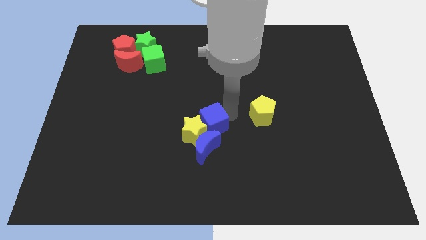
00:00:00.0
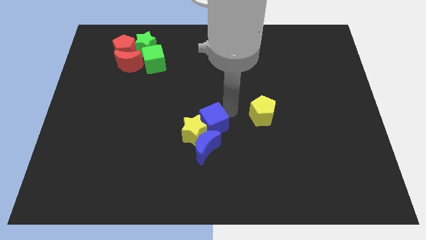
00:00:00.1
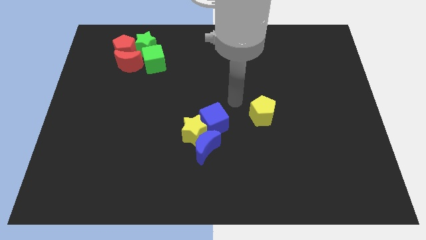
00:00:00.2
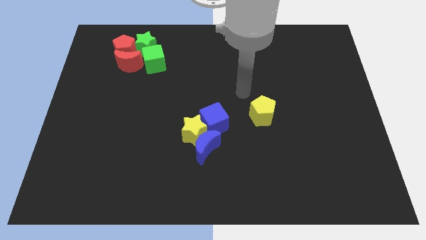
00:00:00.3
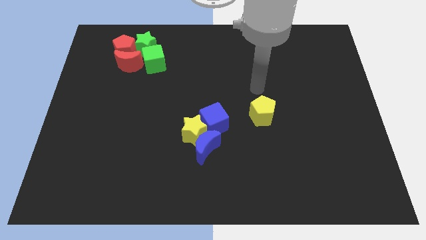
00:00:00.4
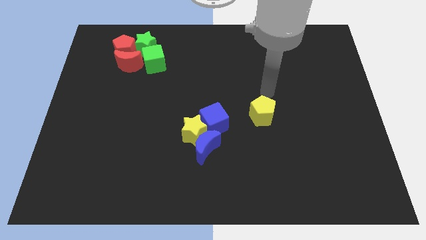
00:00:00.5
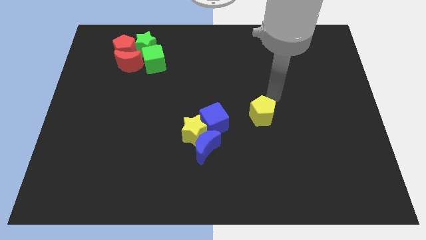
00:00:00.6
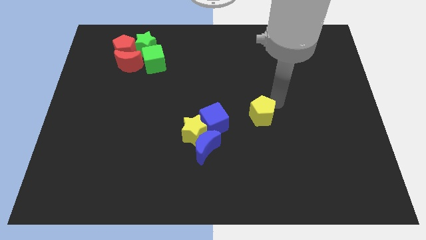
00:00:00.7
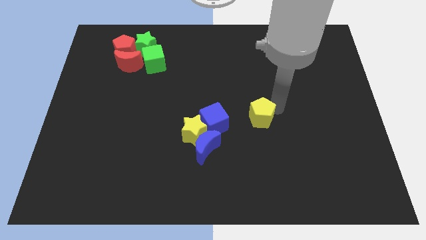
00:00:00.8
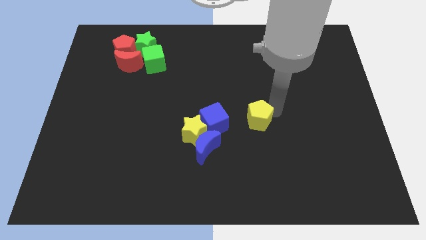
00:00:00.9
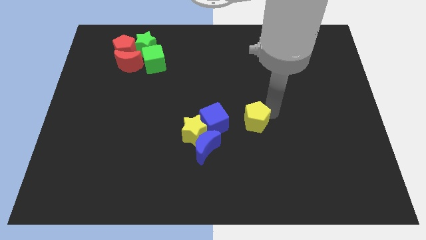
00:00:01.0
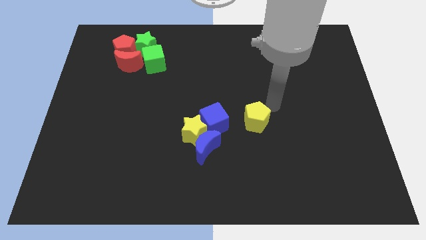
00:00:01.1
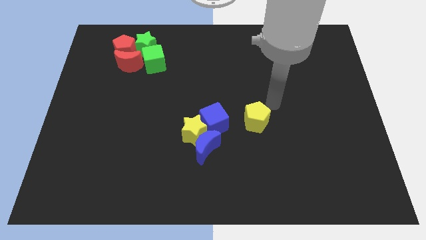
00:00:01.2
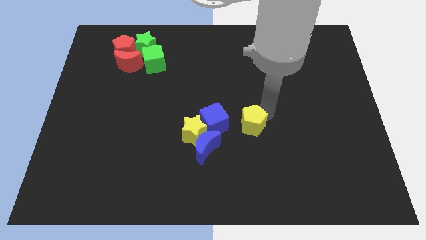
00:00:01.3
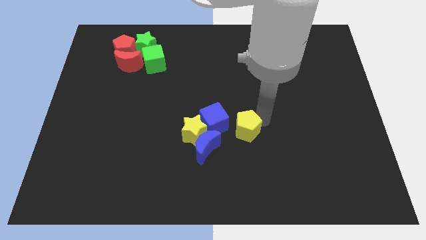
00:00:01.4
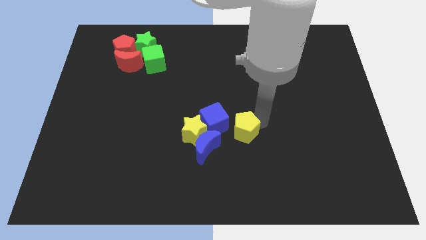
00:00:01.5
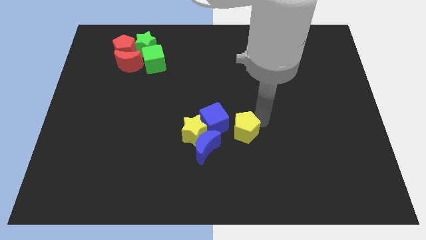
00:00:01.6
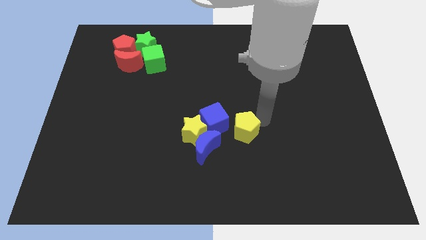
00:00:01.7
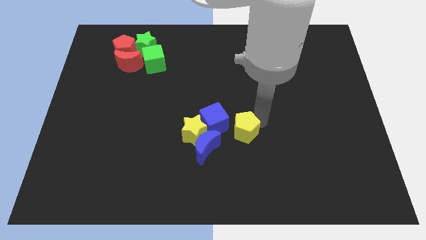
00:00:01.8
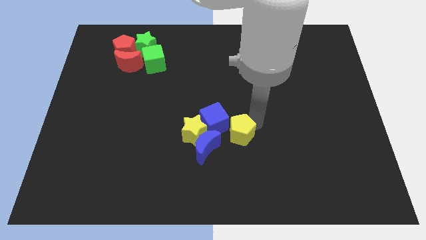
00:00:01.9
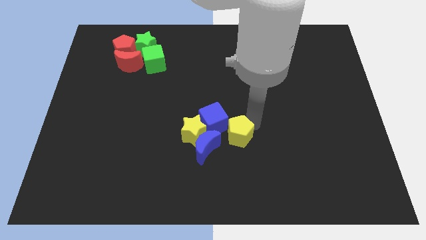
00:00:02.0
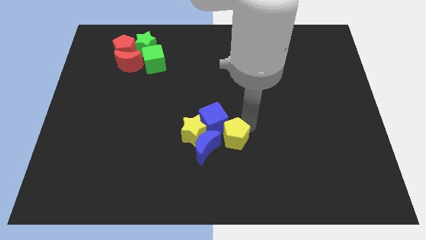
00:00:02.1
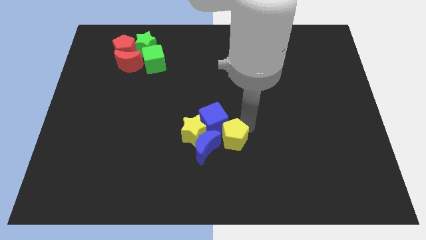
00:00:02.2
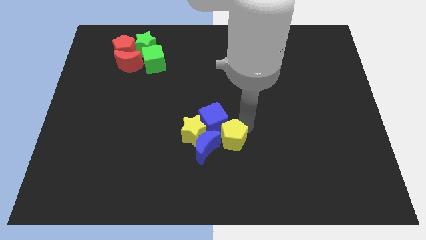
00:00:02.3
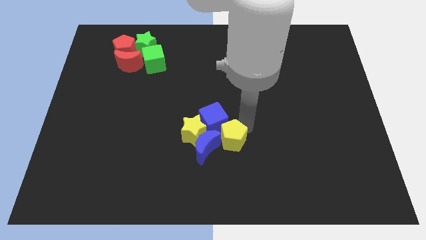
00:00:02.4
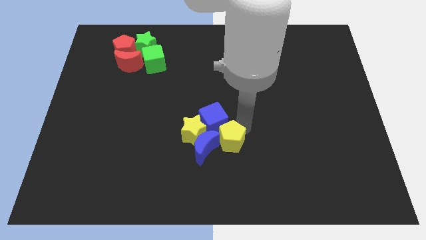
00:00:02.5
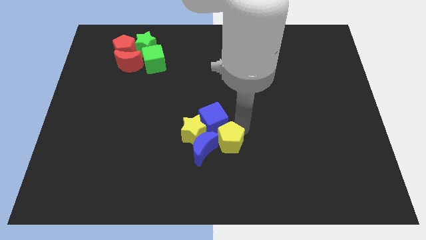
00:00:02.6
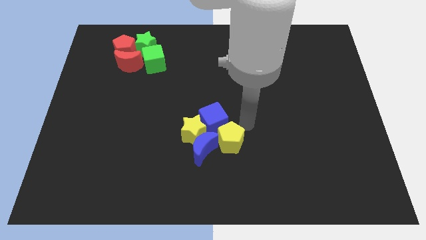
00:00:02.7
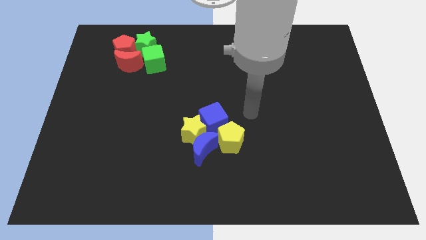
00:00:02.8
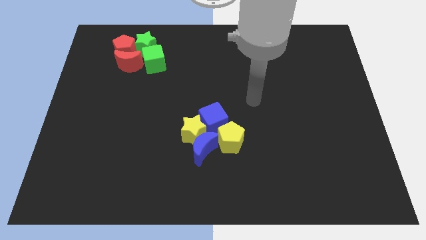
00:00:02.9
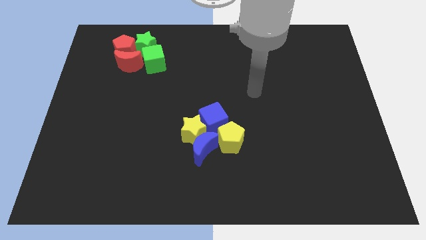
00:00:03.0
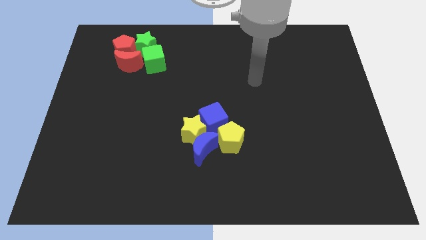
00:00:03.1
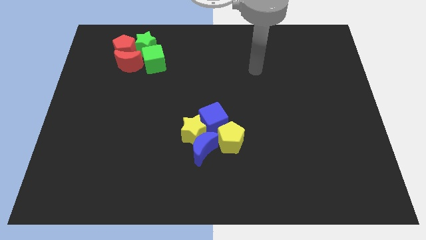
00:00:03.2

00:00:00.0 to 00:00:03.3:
place yellow pentagon with 3 blocks so that all make a group of 4

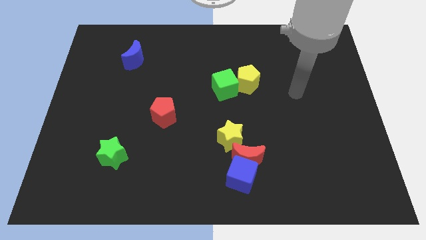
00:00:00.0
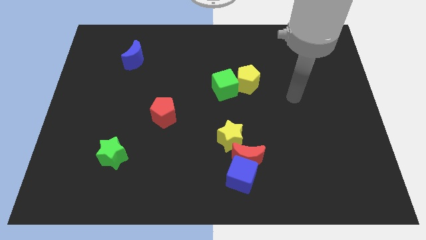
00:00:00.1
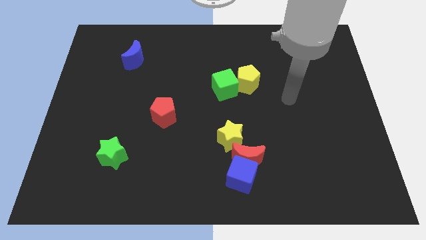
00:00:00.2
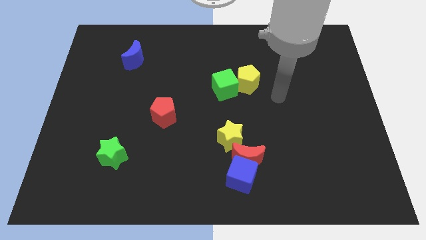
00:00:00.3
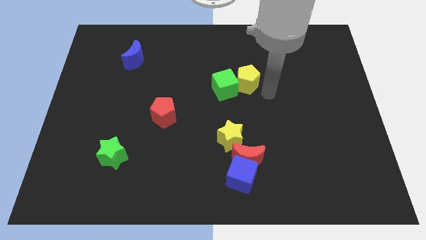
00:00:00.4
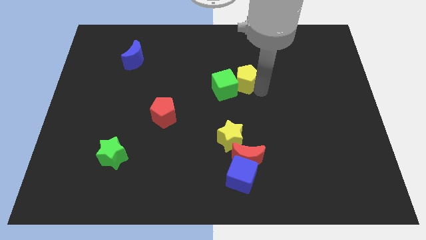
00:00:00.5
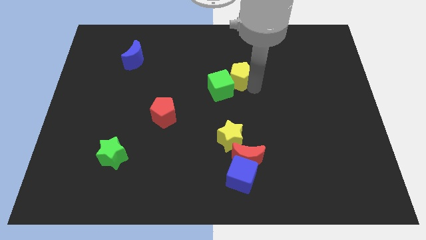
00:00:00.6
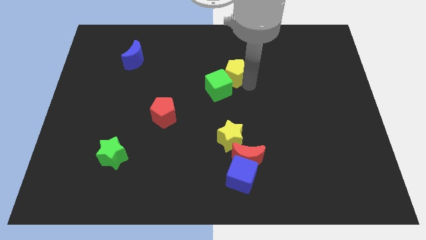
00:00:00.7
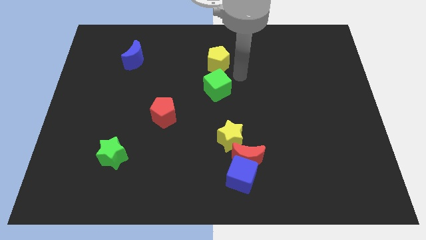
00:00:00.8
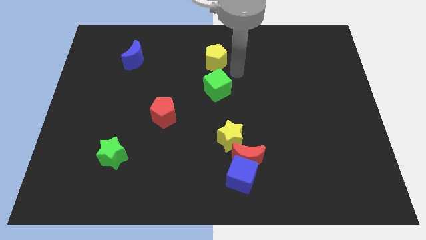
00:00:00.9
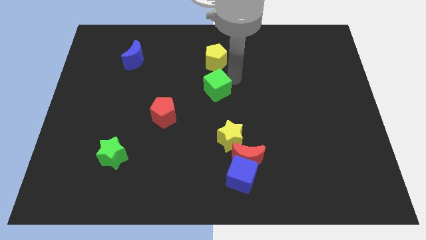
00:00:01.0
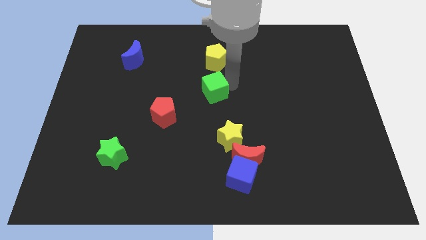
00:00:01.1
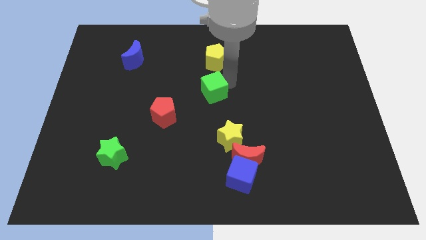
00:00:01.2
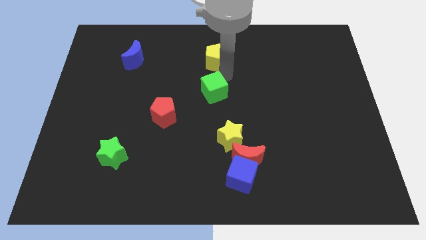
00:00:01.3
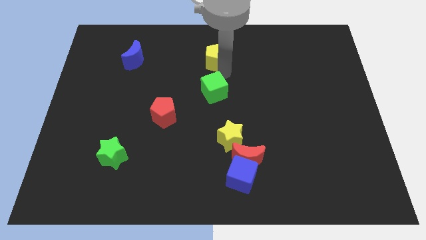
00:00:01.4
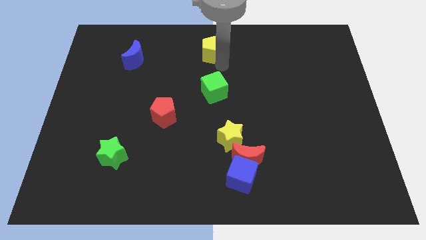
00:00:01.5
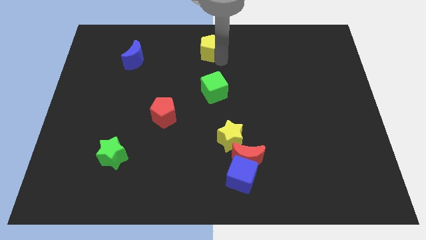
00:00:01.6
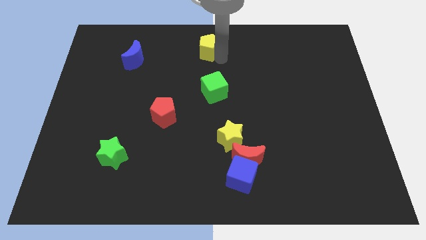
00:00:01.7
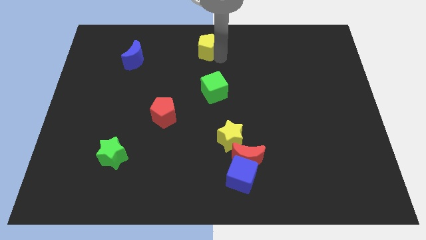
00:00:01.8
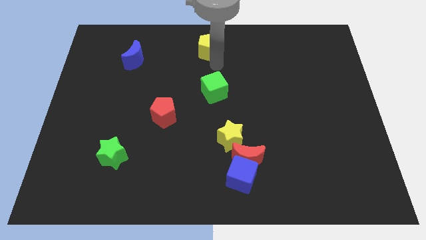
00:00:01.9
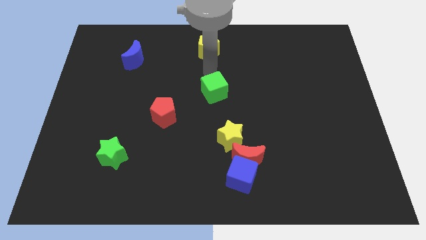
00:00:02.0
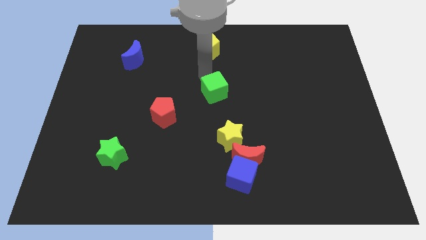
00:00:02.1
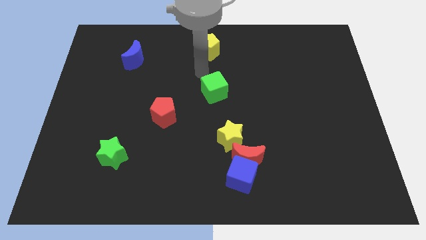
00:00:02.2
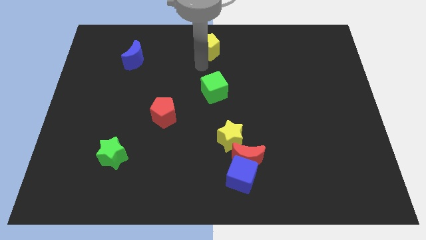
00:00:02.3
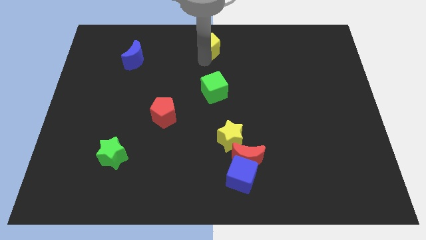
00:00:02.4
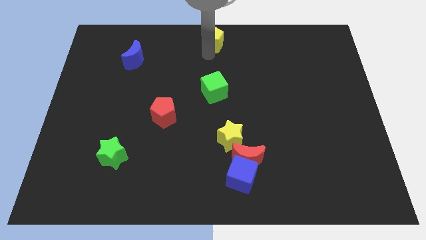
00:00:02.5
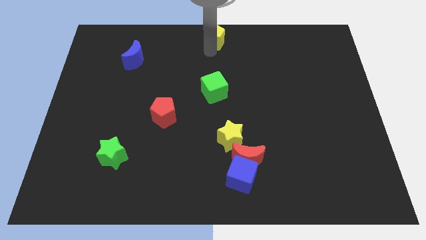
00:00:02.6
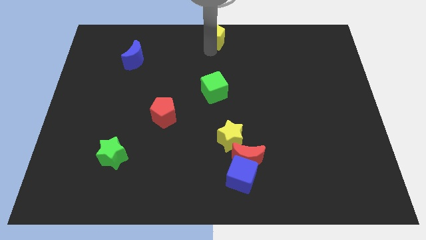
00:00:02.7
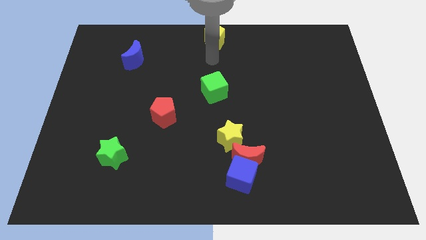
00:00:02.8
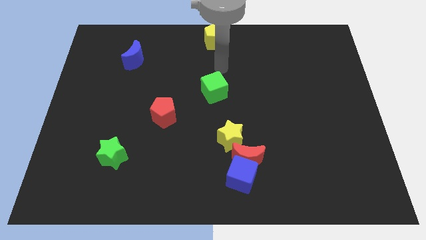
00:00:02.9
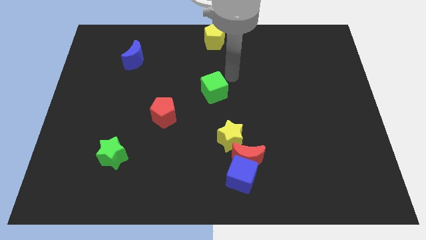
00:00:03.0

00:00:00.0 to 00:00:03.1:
move the yellow pentagon on the top center of the board

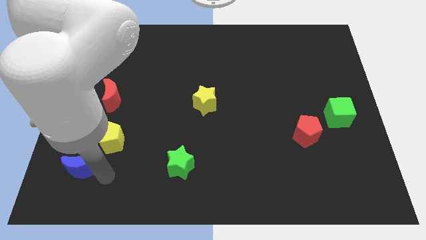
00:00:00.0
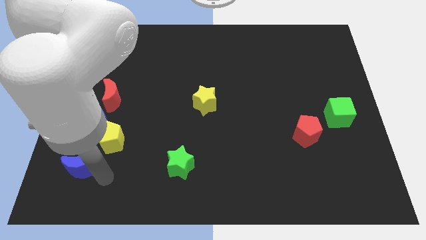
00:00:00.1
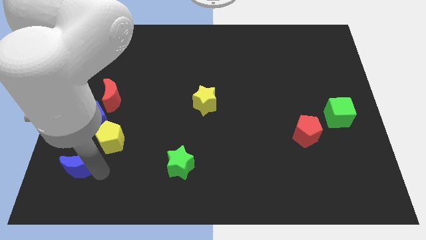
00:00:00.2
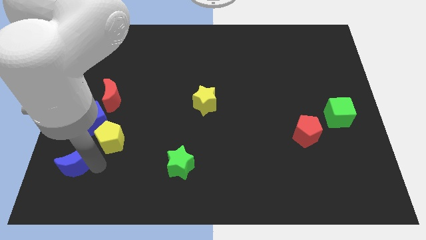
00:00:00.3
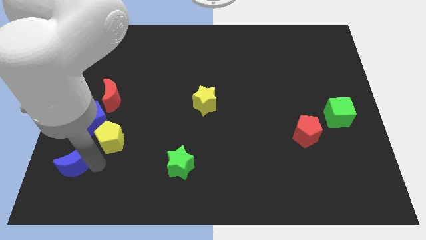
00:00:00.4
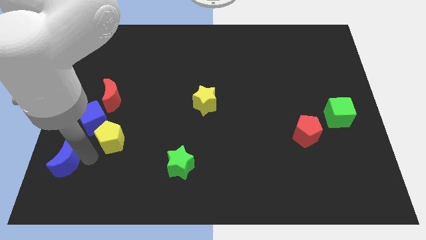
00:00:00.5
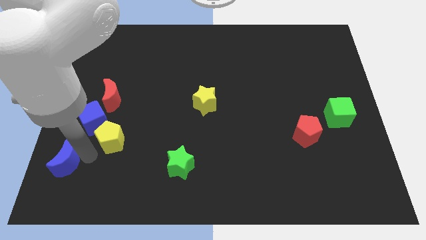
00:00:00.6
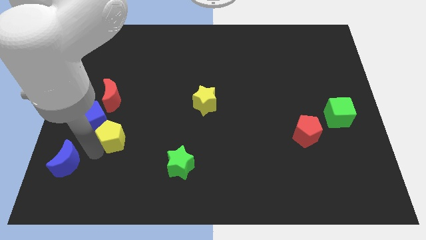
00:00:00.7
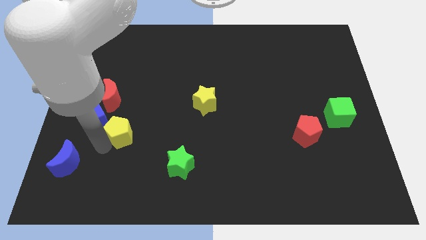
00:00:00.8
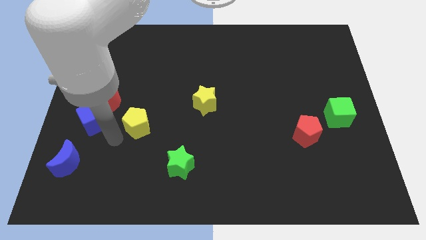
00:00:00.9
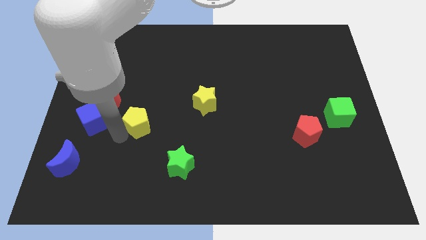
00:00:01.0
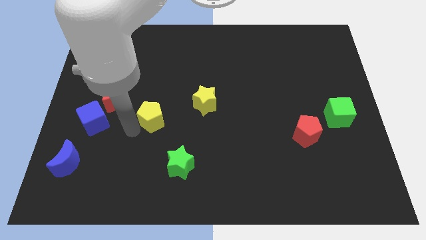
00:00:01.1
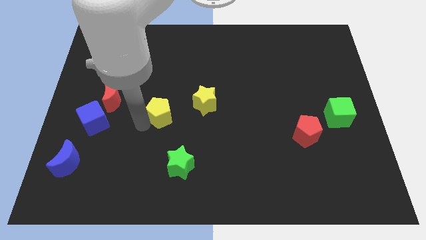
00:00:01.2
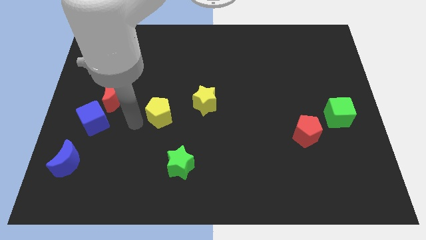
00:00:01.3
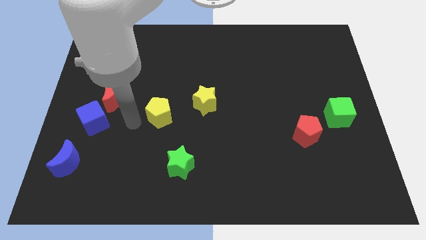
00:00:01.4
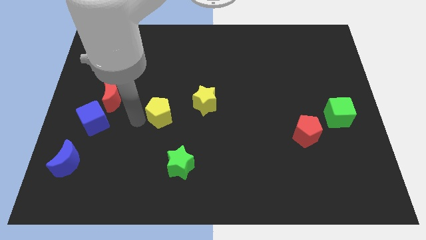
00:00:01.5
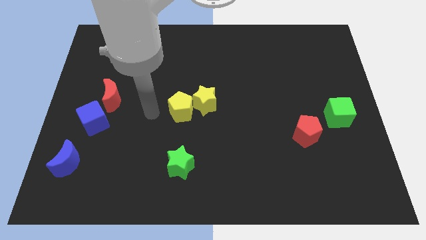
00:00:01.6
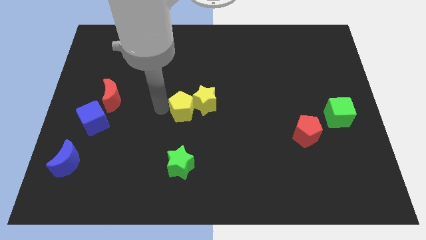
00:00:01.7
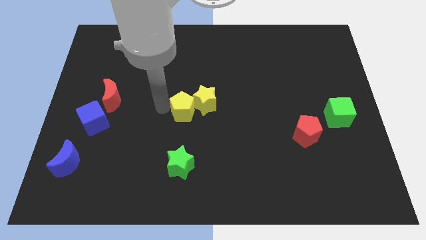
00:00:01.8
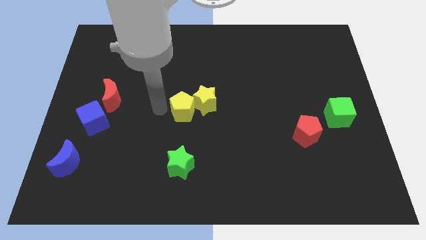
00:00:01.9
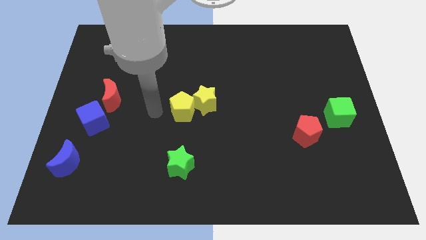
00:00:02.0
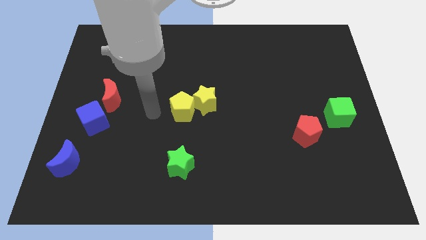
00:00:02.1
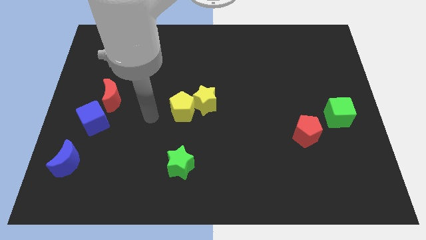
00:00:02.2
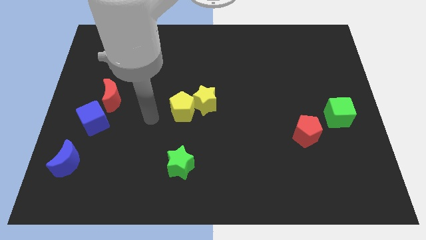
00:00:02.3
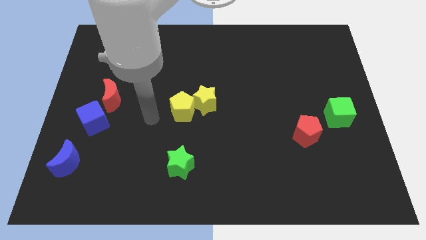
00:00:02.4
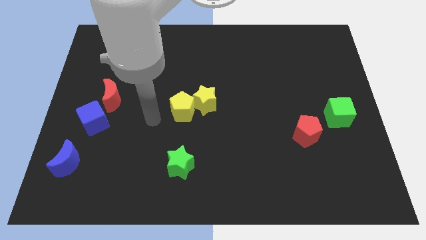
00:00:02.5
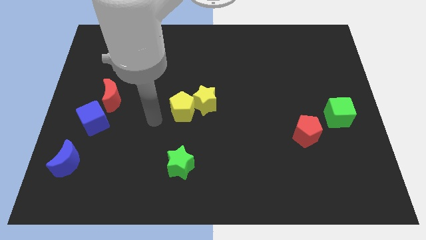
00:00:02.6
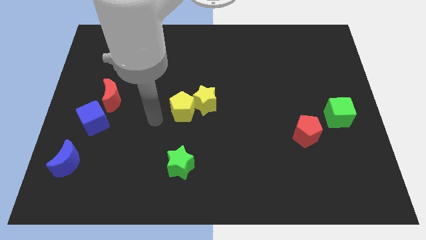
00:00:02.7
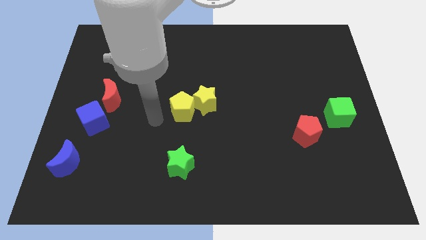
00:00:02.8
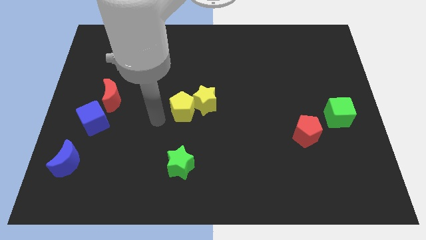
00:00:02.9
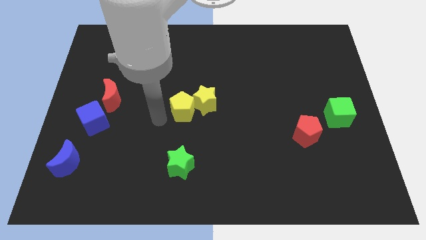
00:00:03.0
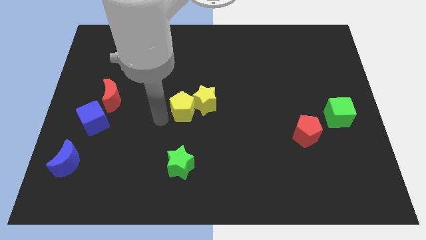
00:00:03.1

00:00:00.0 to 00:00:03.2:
move the yellow pentagon close to the yellow star
